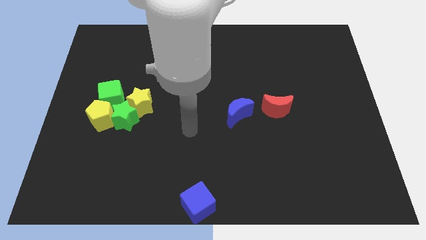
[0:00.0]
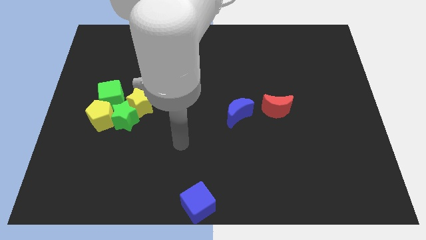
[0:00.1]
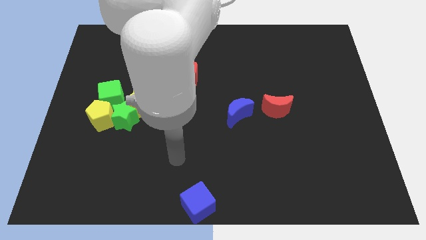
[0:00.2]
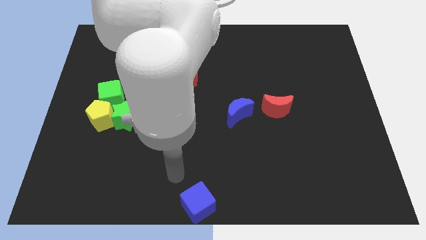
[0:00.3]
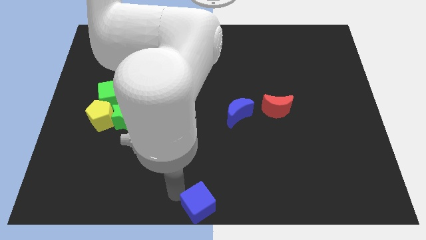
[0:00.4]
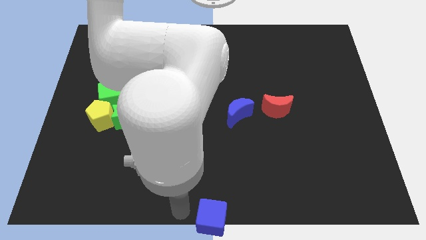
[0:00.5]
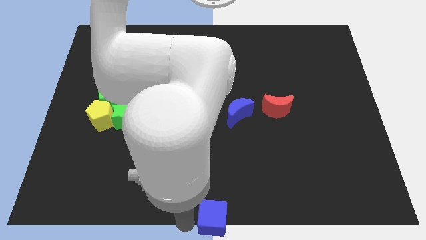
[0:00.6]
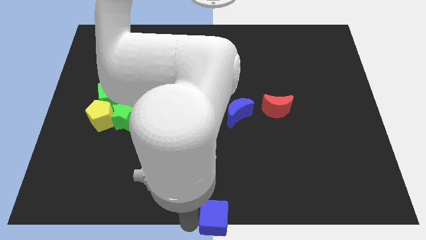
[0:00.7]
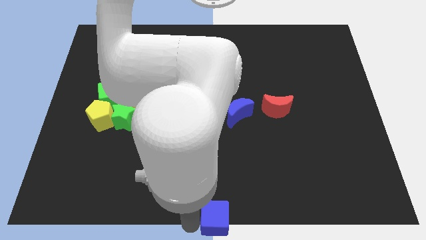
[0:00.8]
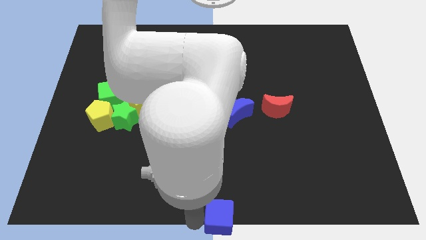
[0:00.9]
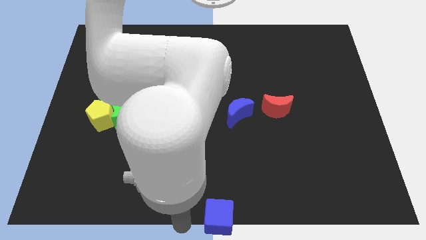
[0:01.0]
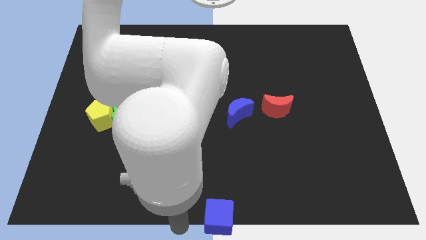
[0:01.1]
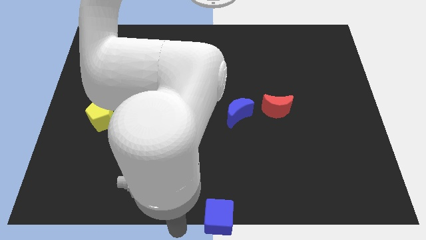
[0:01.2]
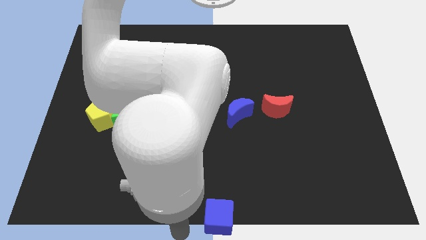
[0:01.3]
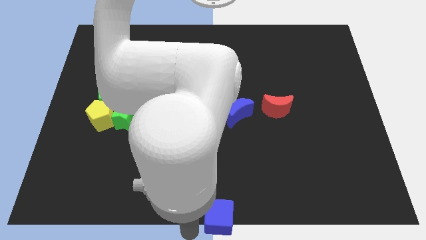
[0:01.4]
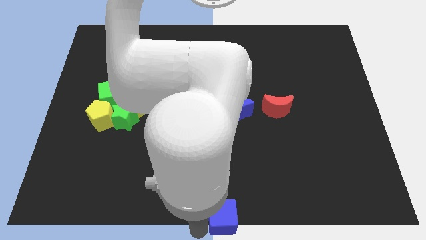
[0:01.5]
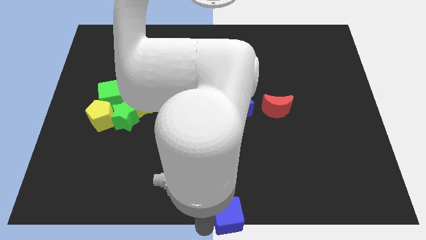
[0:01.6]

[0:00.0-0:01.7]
push the blue cube towards the center bottom of the board

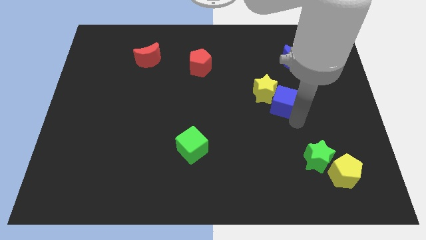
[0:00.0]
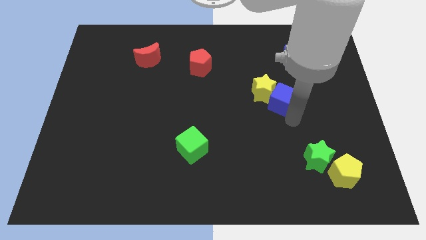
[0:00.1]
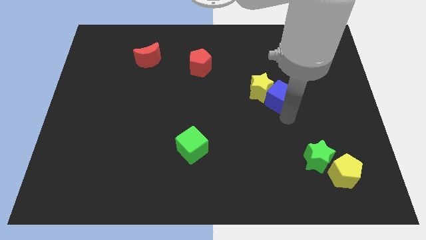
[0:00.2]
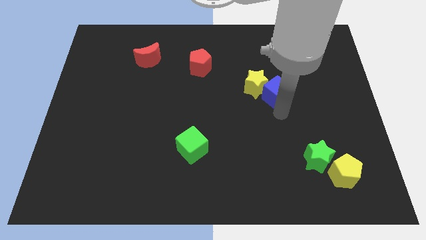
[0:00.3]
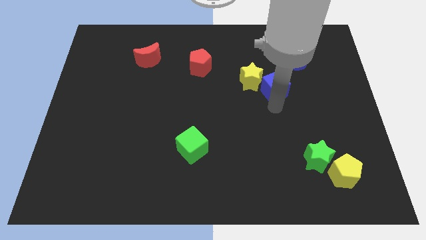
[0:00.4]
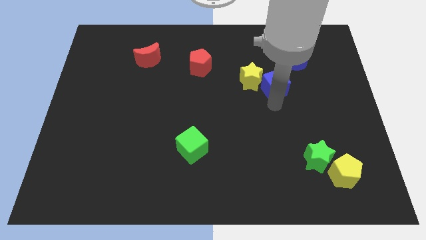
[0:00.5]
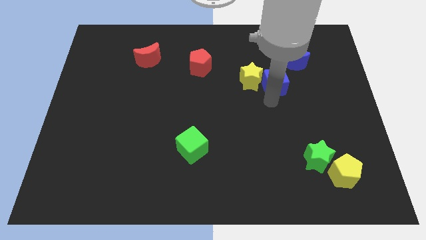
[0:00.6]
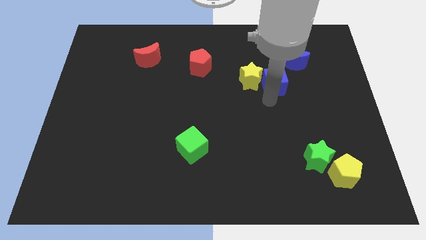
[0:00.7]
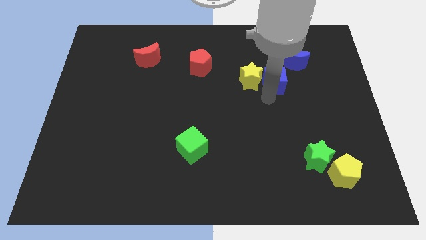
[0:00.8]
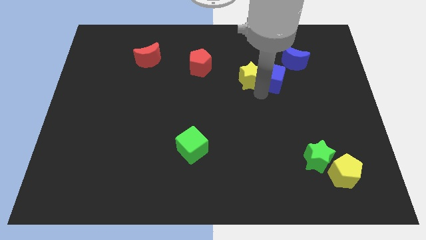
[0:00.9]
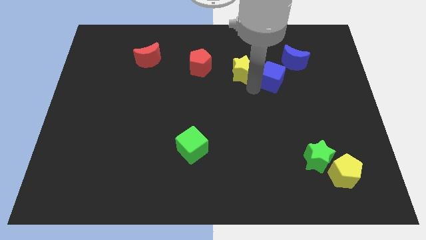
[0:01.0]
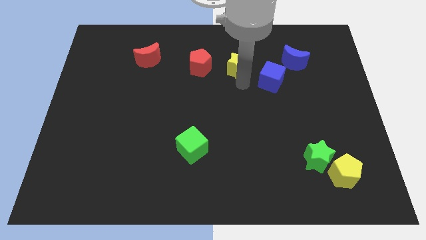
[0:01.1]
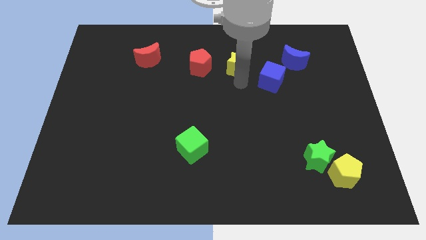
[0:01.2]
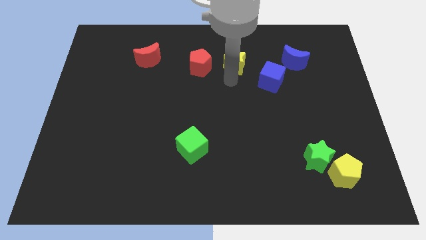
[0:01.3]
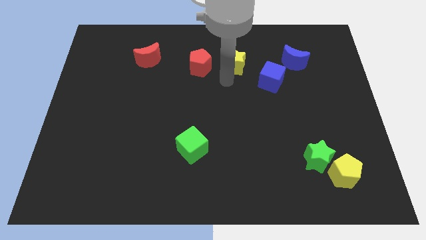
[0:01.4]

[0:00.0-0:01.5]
place yellow star right to the red pentagon

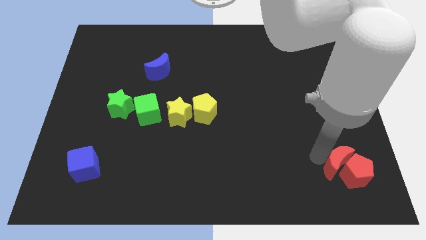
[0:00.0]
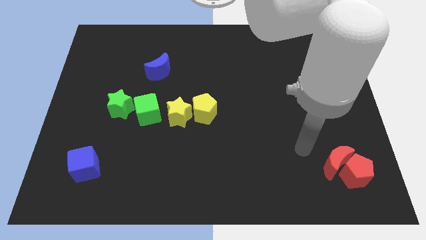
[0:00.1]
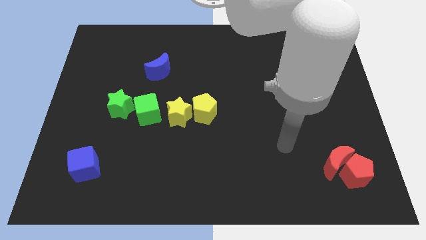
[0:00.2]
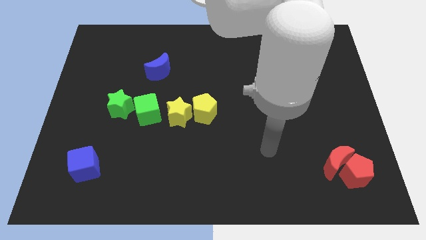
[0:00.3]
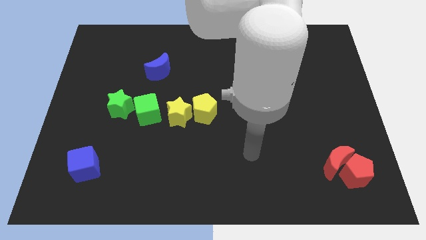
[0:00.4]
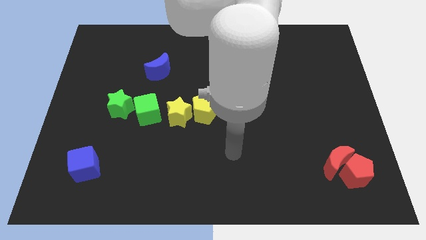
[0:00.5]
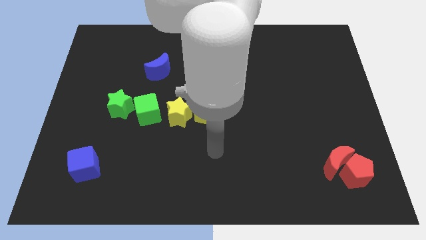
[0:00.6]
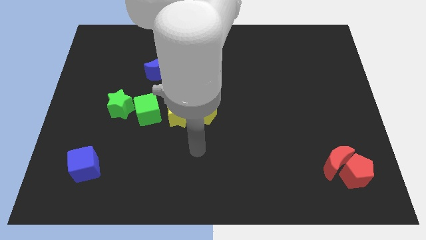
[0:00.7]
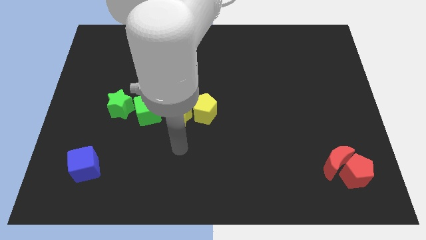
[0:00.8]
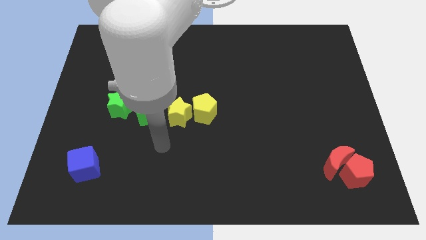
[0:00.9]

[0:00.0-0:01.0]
move your arm to the bottom of the yellow star

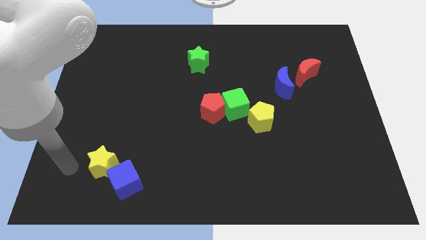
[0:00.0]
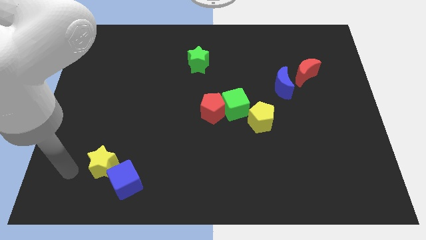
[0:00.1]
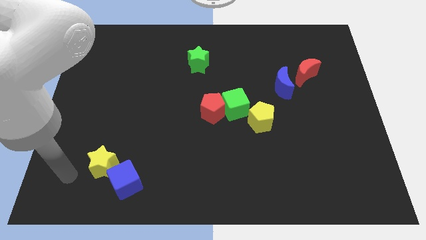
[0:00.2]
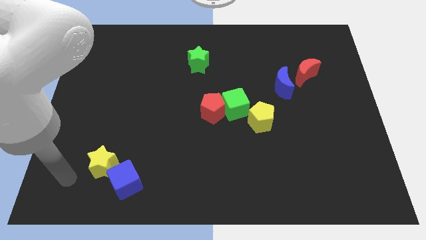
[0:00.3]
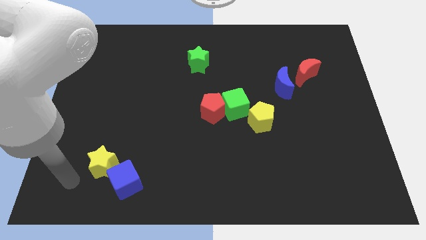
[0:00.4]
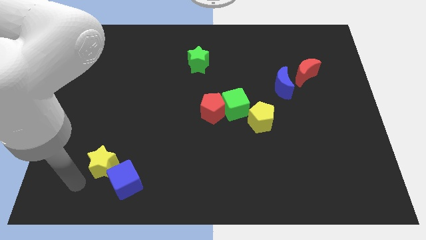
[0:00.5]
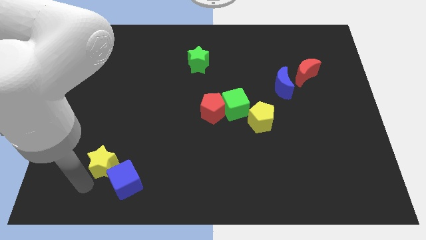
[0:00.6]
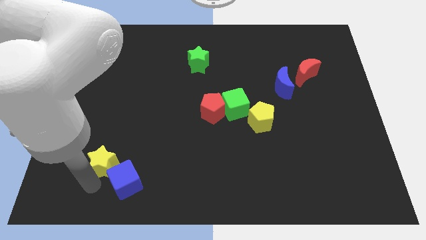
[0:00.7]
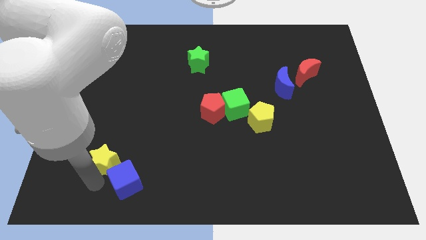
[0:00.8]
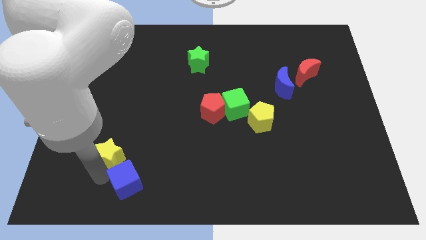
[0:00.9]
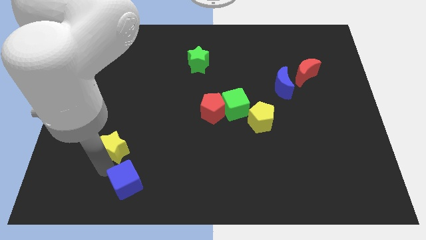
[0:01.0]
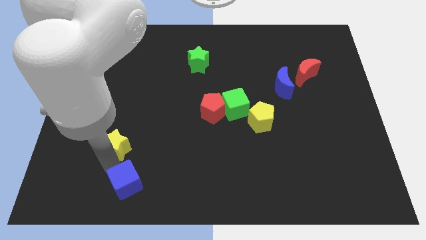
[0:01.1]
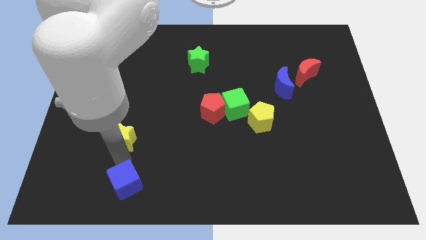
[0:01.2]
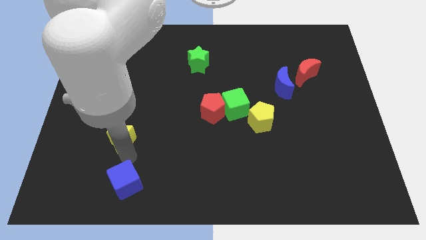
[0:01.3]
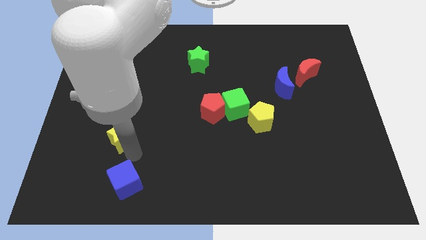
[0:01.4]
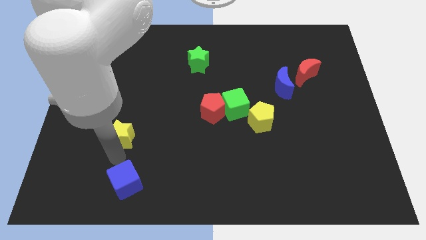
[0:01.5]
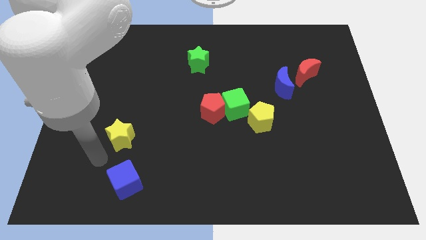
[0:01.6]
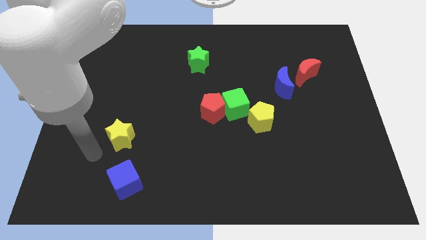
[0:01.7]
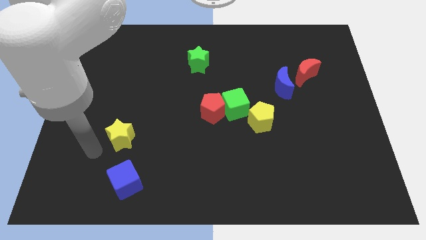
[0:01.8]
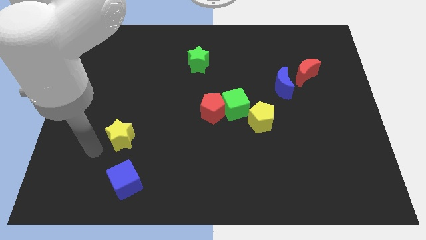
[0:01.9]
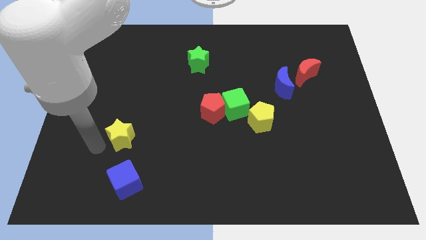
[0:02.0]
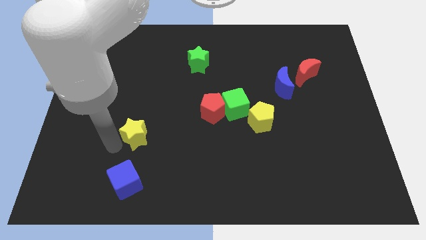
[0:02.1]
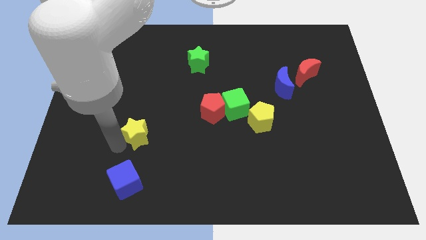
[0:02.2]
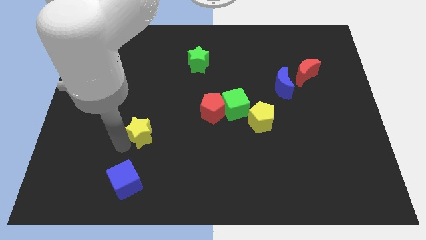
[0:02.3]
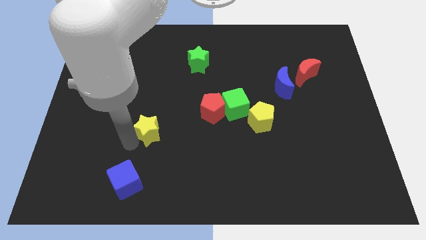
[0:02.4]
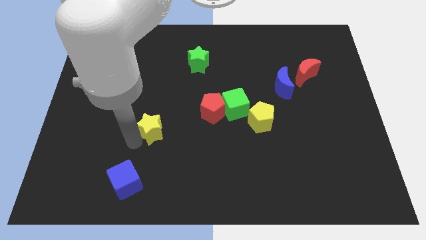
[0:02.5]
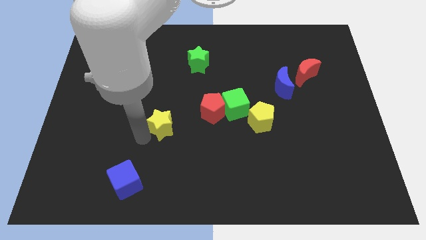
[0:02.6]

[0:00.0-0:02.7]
push the yellow star to the top right of the blue cube

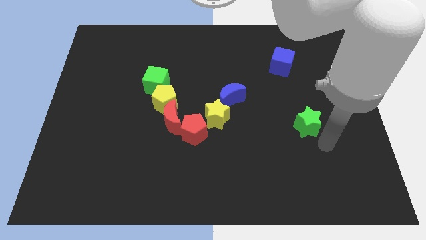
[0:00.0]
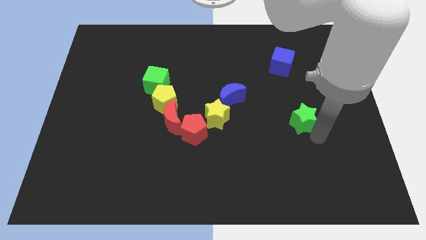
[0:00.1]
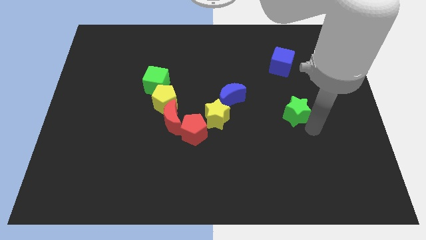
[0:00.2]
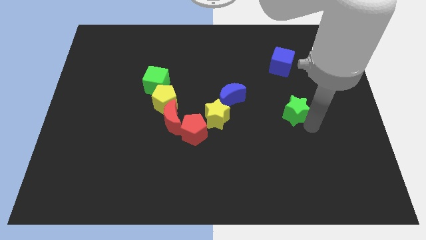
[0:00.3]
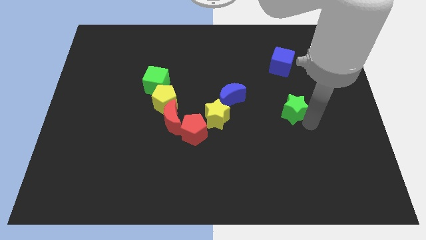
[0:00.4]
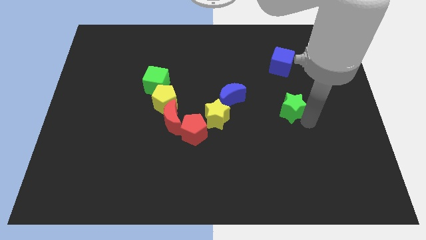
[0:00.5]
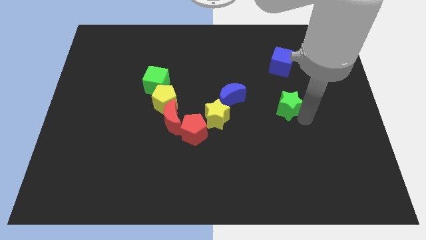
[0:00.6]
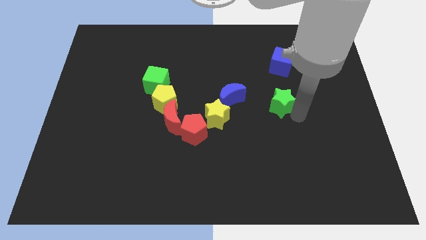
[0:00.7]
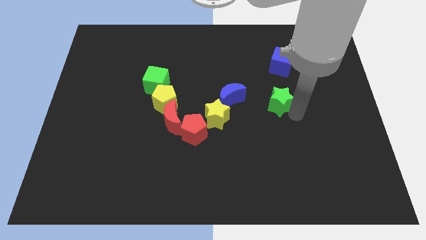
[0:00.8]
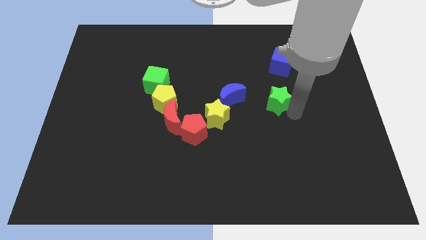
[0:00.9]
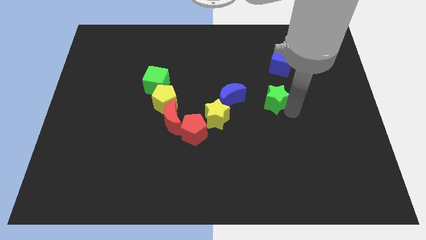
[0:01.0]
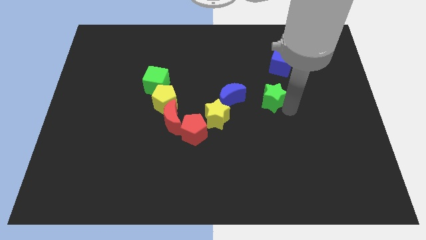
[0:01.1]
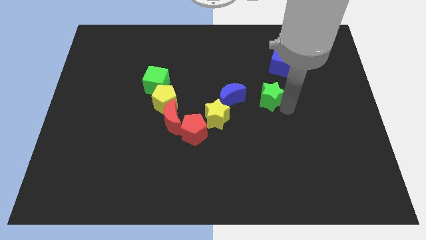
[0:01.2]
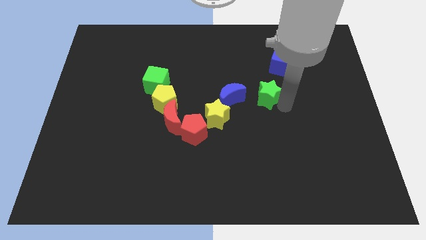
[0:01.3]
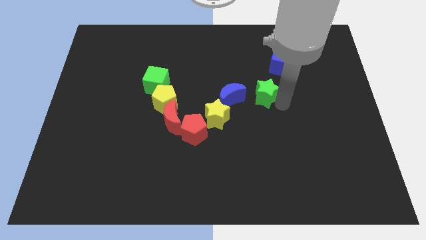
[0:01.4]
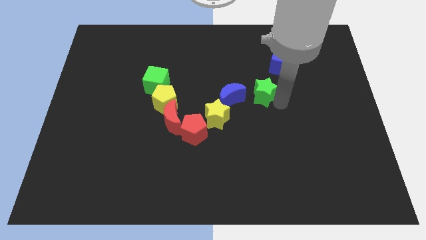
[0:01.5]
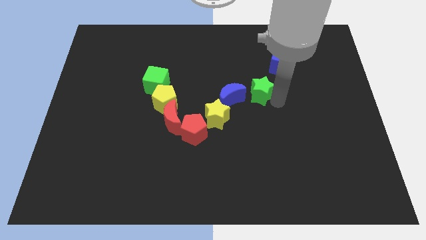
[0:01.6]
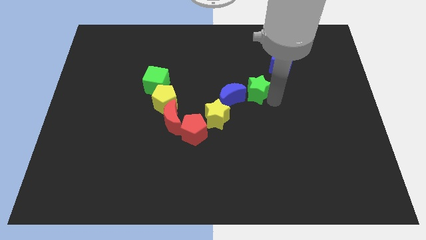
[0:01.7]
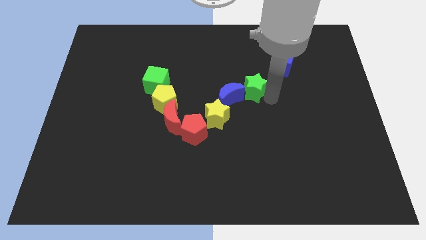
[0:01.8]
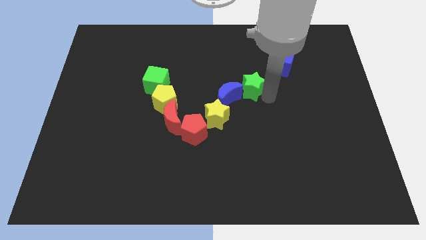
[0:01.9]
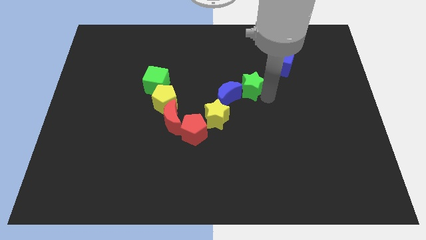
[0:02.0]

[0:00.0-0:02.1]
place the green star right to the blue crescent
